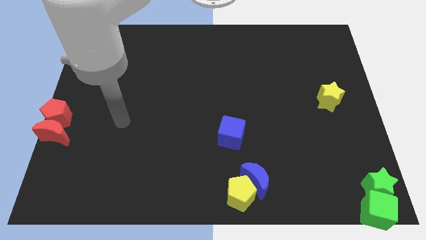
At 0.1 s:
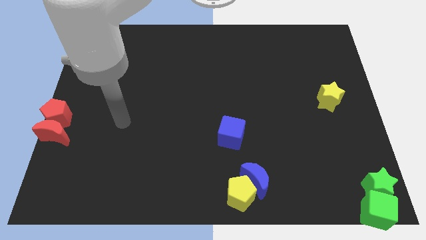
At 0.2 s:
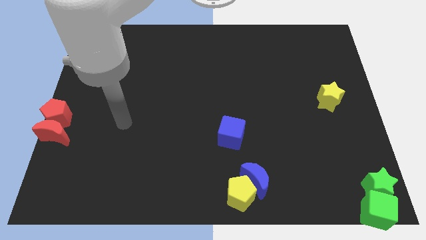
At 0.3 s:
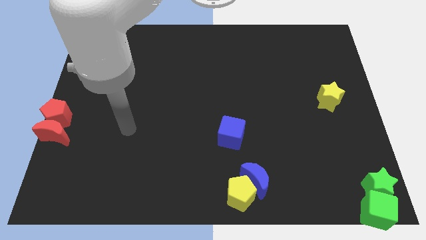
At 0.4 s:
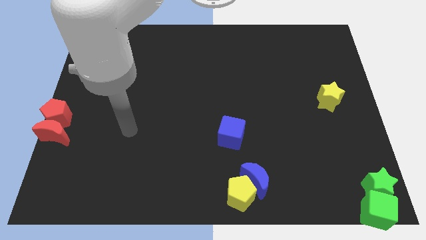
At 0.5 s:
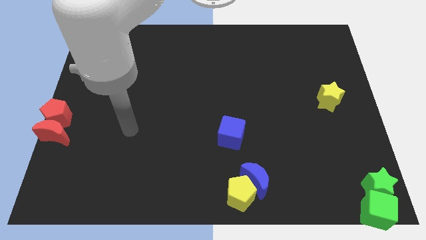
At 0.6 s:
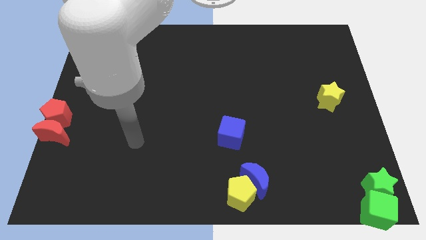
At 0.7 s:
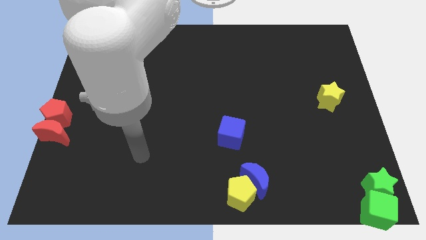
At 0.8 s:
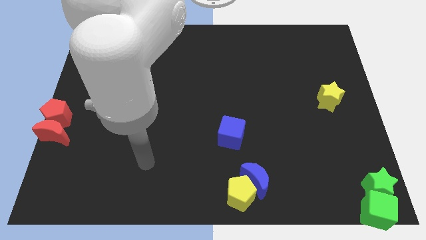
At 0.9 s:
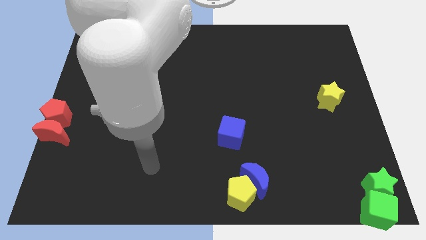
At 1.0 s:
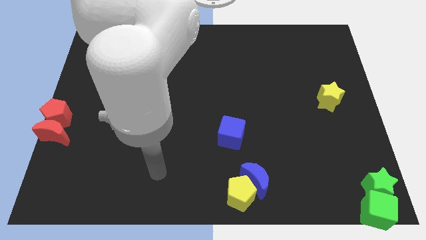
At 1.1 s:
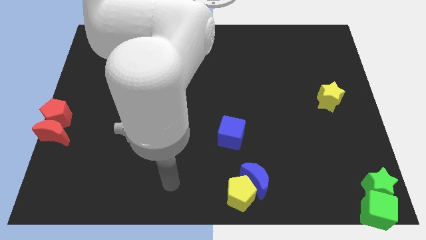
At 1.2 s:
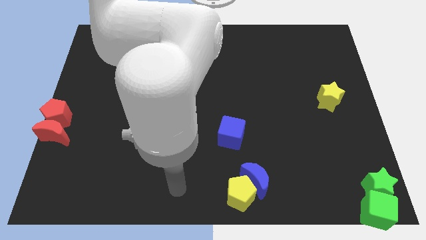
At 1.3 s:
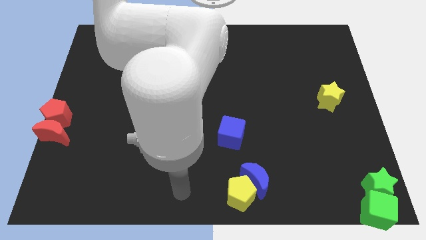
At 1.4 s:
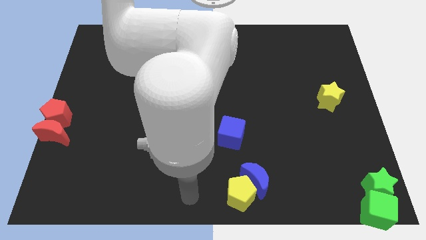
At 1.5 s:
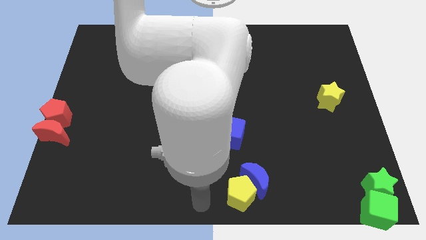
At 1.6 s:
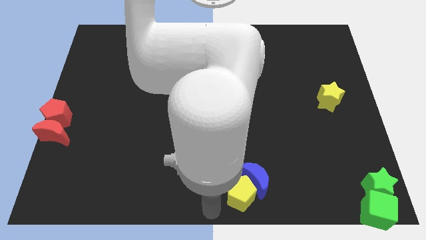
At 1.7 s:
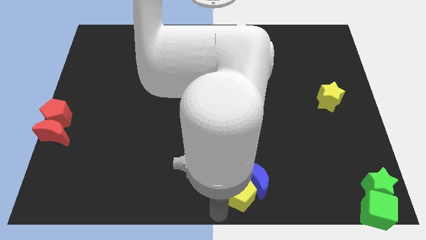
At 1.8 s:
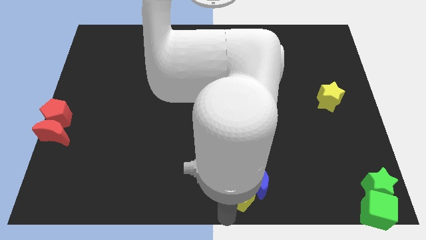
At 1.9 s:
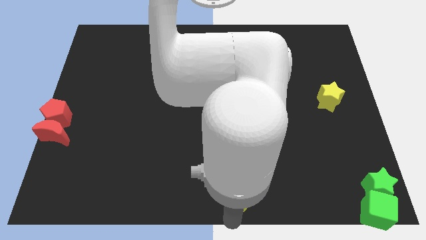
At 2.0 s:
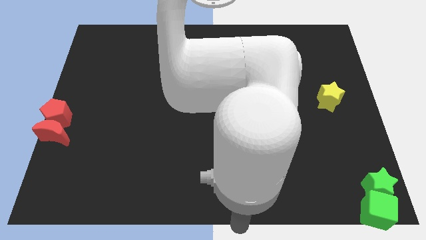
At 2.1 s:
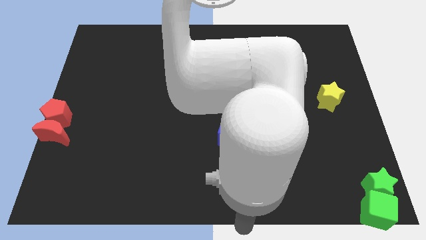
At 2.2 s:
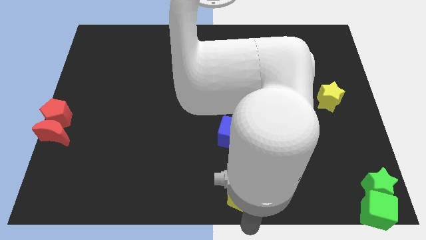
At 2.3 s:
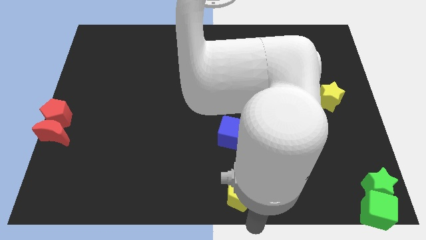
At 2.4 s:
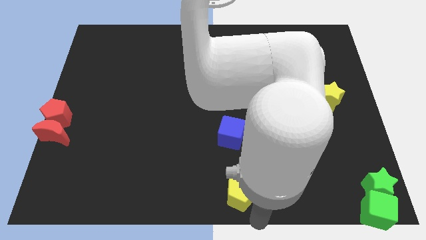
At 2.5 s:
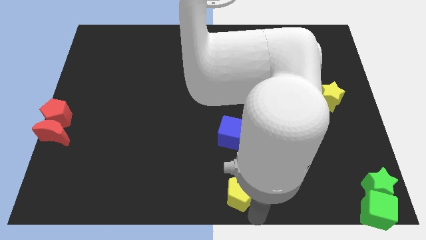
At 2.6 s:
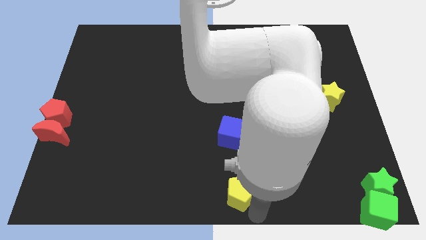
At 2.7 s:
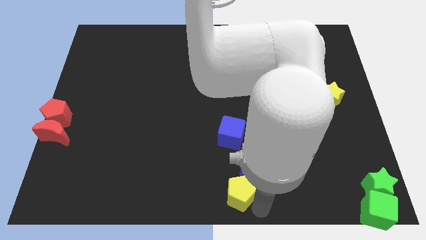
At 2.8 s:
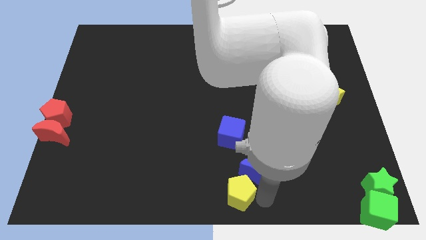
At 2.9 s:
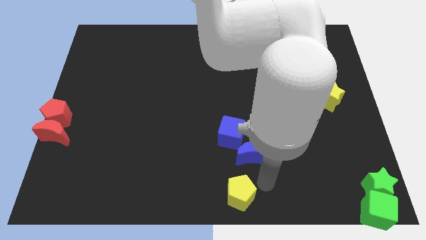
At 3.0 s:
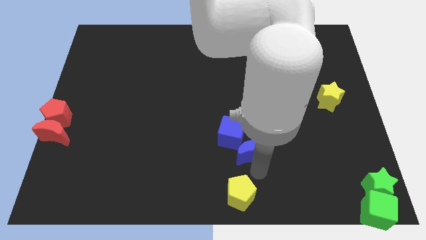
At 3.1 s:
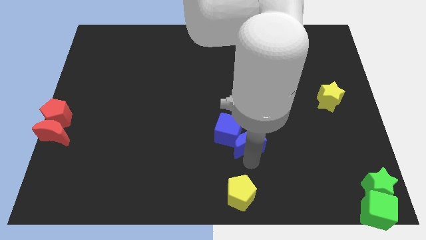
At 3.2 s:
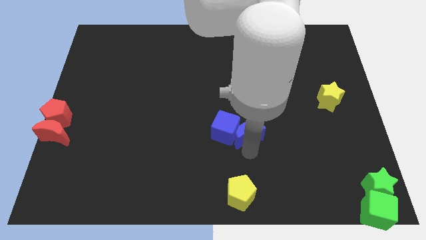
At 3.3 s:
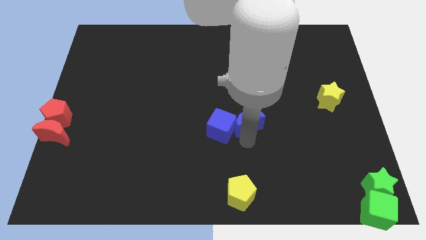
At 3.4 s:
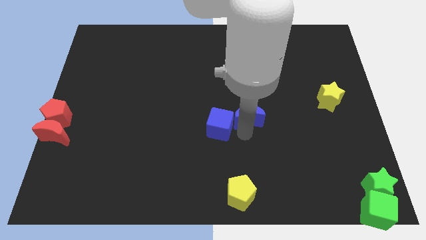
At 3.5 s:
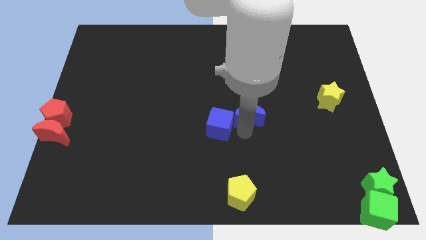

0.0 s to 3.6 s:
move blue crescent into blue cube

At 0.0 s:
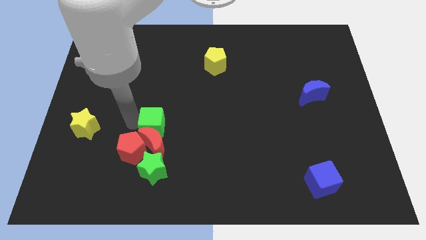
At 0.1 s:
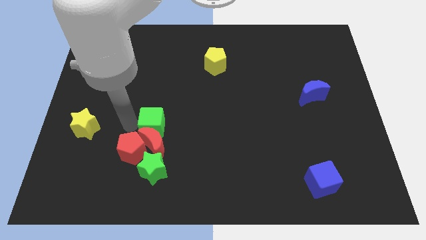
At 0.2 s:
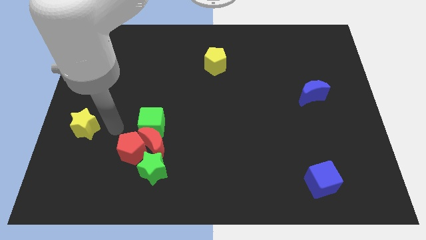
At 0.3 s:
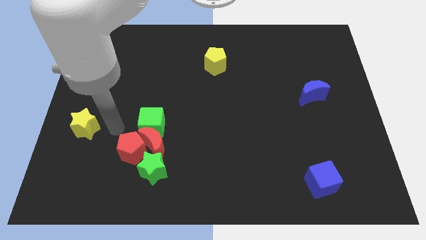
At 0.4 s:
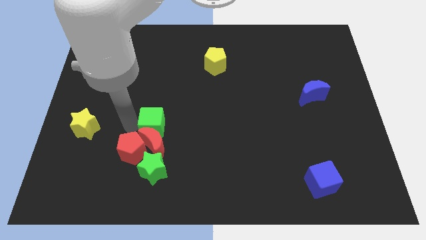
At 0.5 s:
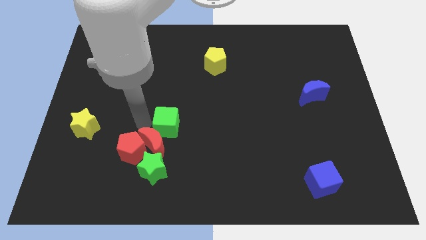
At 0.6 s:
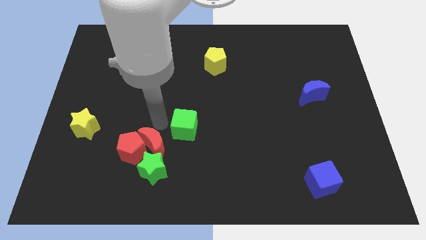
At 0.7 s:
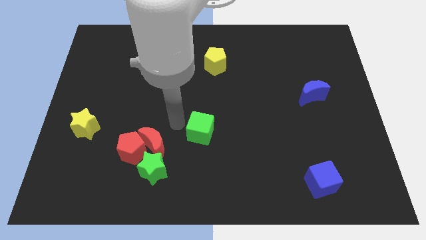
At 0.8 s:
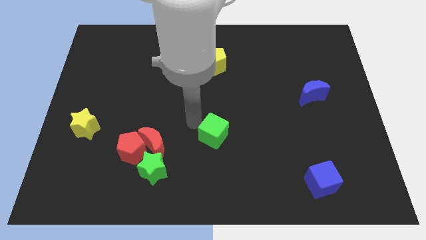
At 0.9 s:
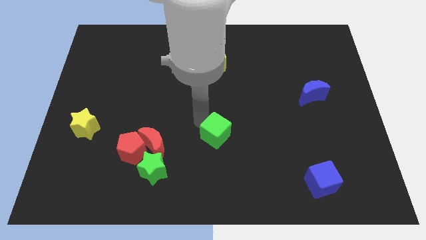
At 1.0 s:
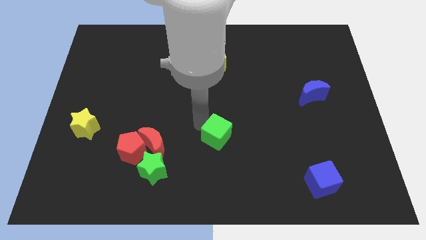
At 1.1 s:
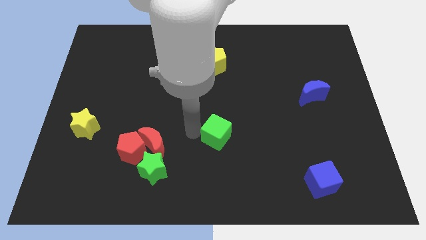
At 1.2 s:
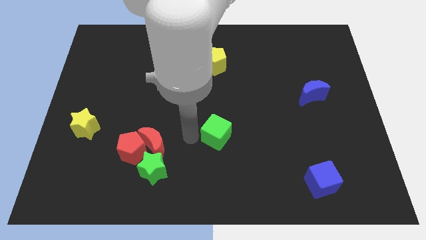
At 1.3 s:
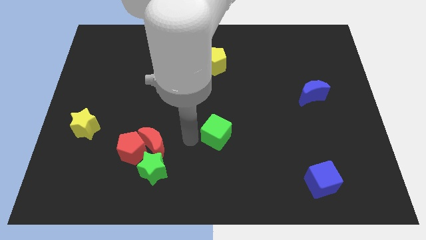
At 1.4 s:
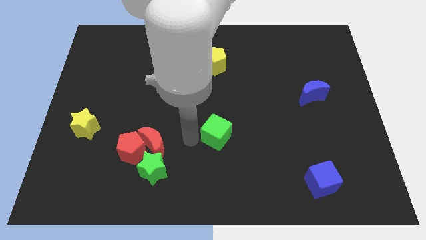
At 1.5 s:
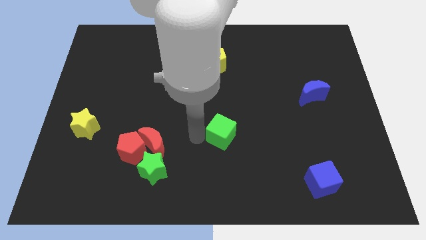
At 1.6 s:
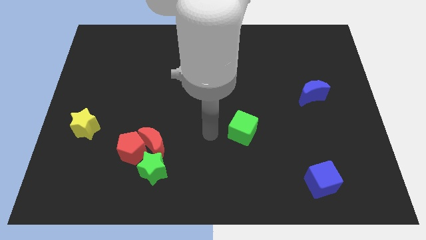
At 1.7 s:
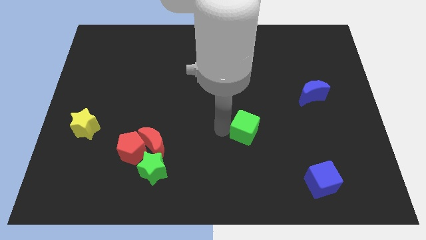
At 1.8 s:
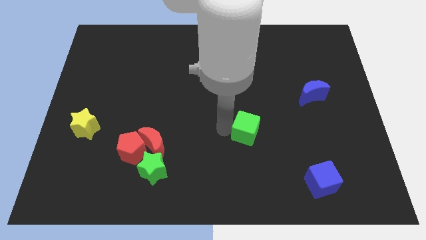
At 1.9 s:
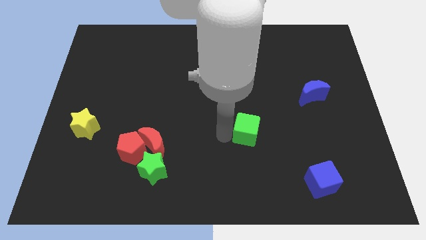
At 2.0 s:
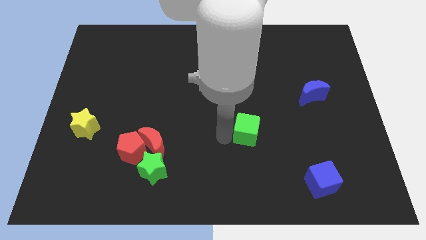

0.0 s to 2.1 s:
move the green cube to the center of the board

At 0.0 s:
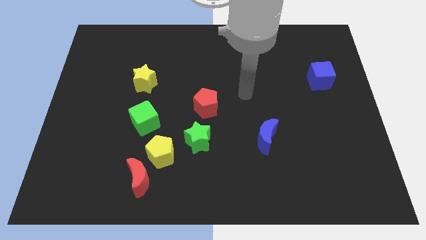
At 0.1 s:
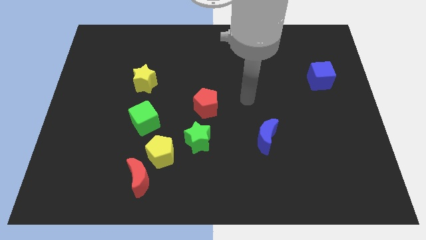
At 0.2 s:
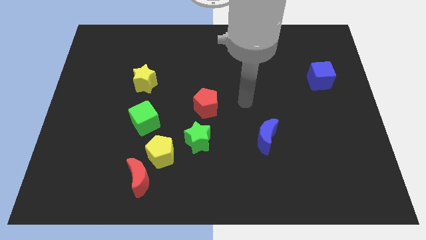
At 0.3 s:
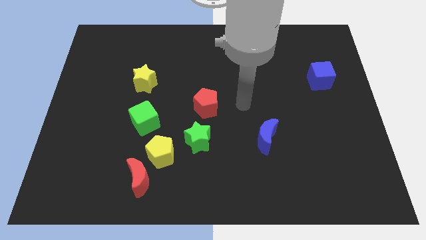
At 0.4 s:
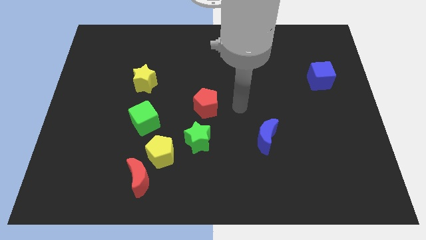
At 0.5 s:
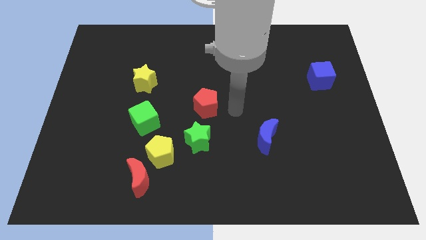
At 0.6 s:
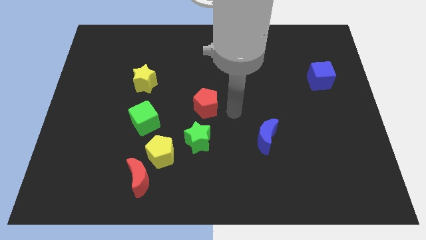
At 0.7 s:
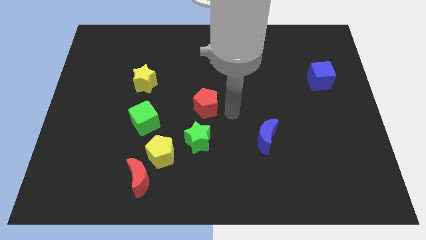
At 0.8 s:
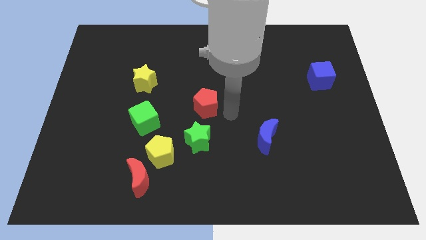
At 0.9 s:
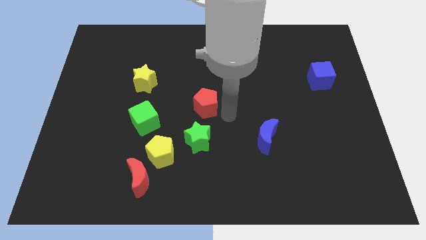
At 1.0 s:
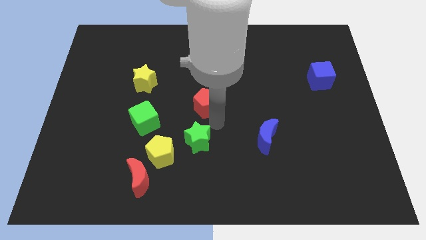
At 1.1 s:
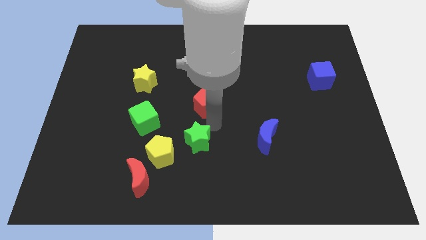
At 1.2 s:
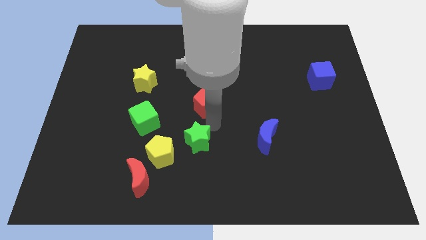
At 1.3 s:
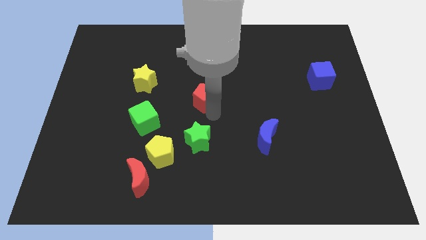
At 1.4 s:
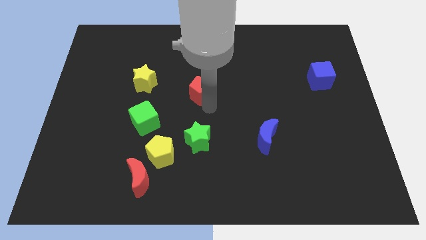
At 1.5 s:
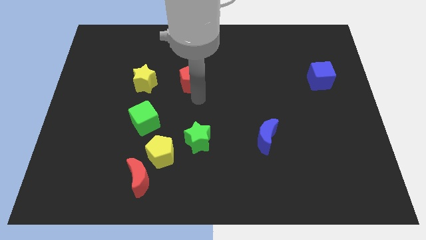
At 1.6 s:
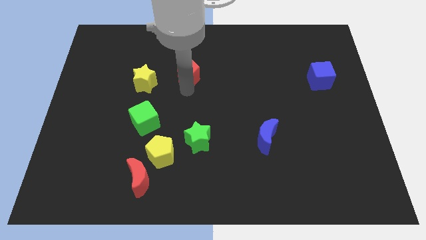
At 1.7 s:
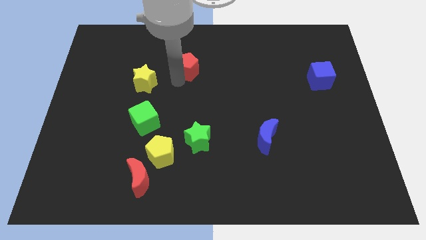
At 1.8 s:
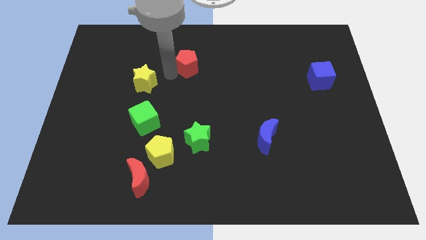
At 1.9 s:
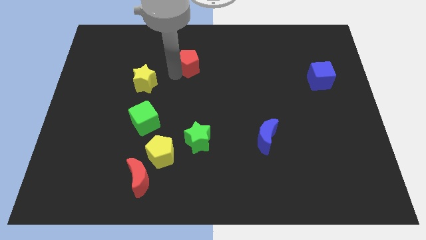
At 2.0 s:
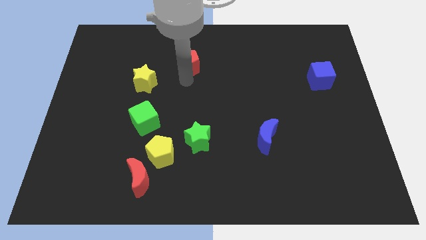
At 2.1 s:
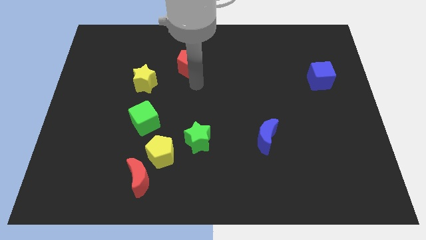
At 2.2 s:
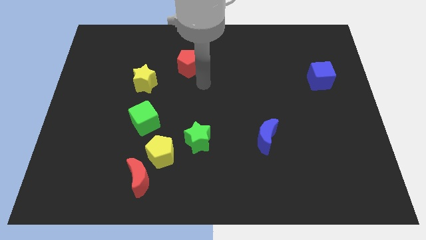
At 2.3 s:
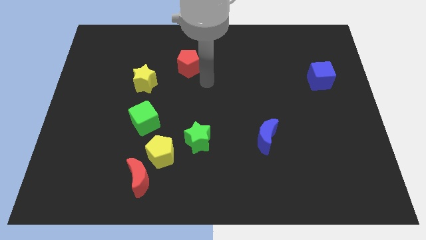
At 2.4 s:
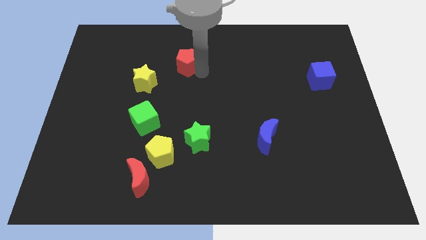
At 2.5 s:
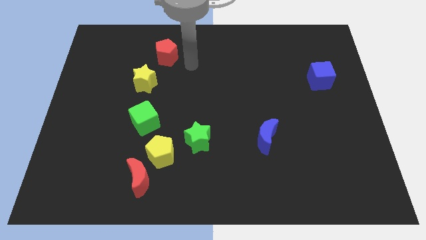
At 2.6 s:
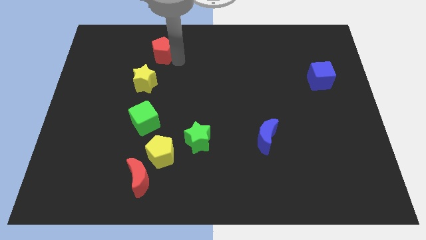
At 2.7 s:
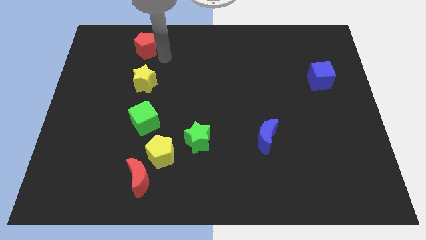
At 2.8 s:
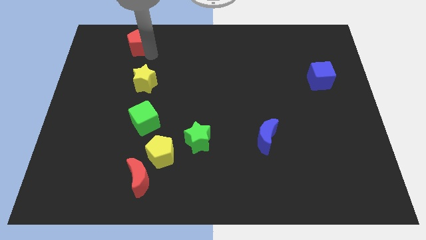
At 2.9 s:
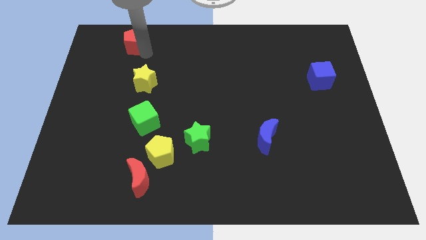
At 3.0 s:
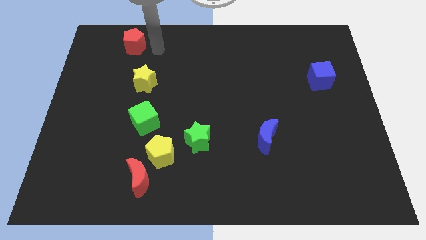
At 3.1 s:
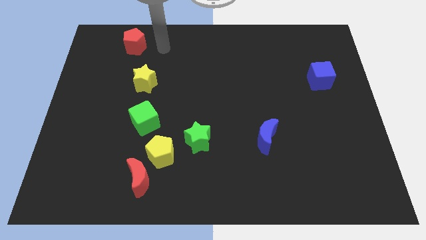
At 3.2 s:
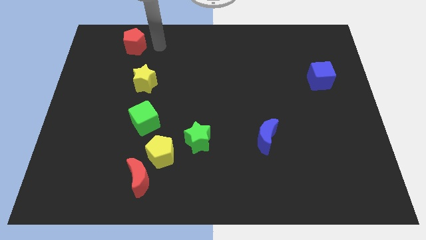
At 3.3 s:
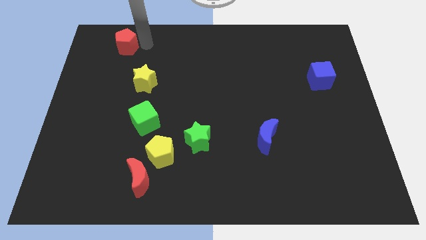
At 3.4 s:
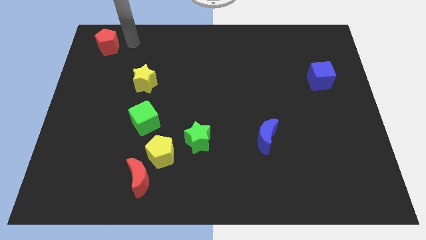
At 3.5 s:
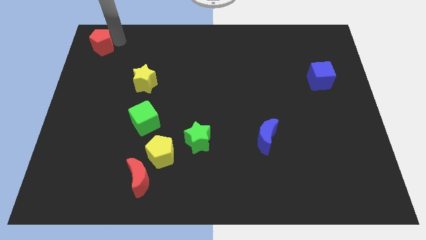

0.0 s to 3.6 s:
push the red pentagon slightly towards the top left side of the board
